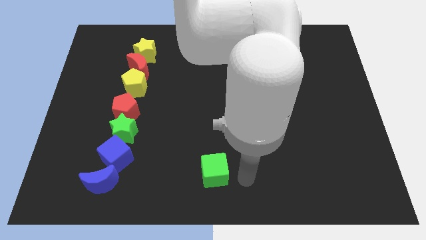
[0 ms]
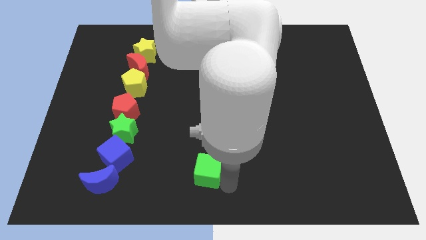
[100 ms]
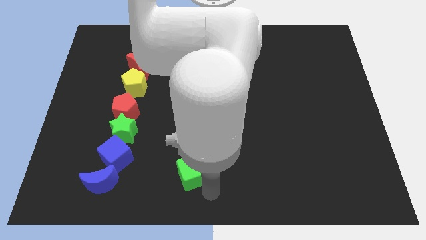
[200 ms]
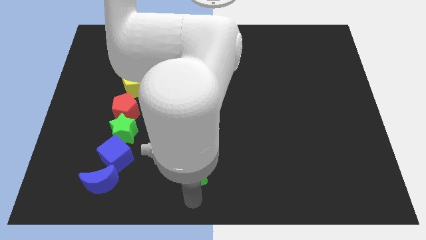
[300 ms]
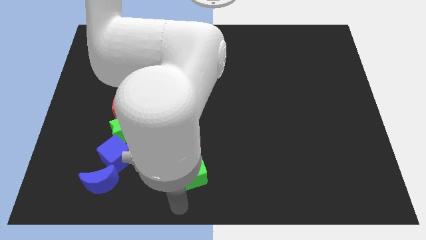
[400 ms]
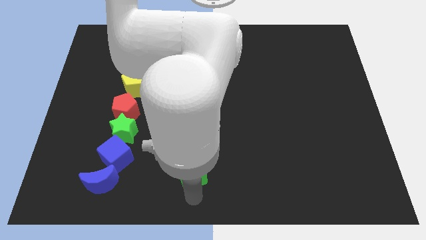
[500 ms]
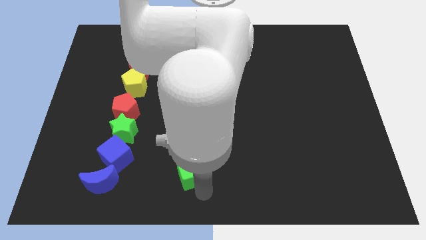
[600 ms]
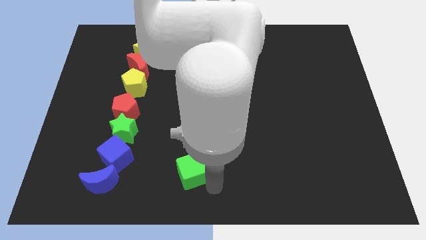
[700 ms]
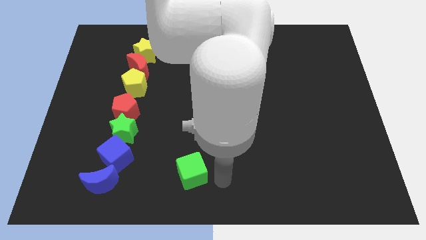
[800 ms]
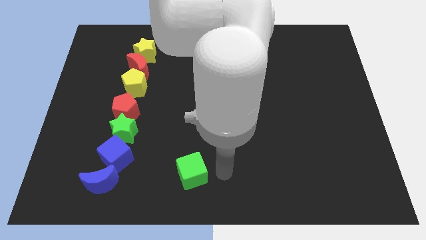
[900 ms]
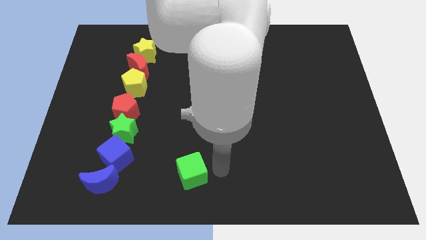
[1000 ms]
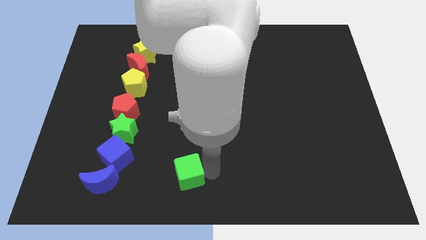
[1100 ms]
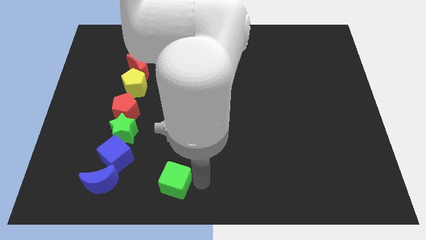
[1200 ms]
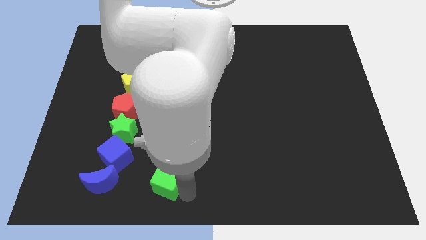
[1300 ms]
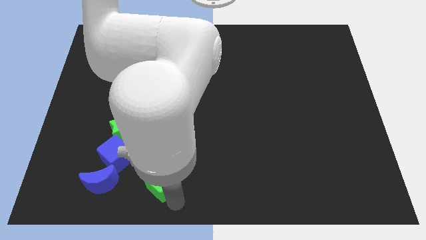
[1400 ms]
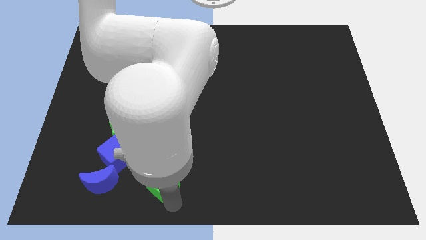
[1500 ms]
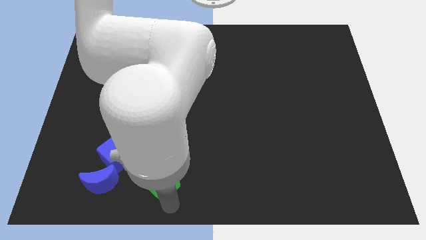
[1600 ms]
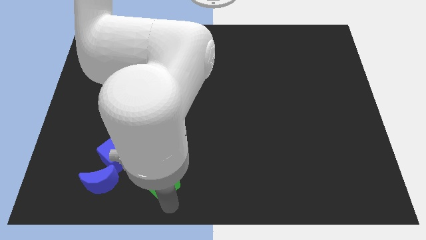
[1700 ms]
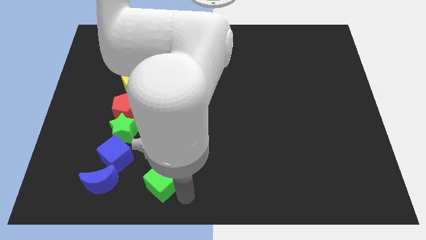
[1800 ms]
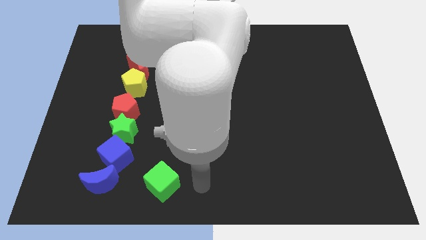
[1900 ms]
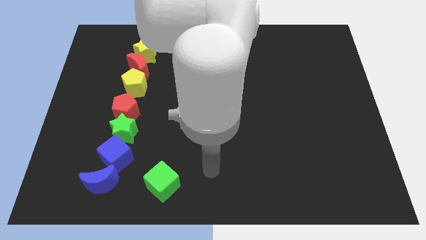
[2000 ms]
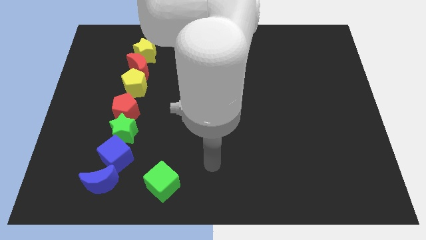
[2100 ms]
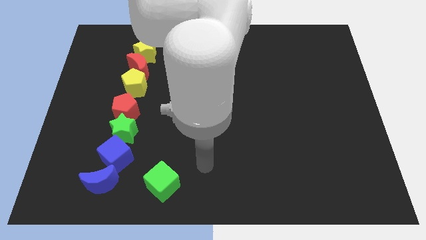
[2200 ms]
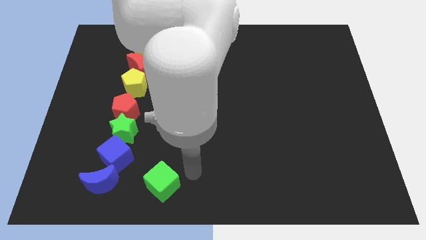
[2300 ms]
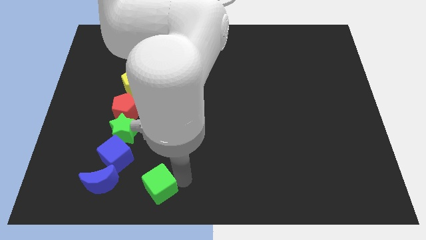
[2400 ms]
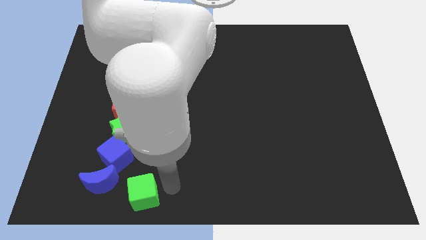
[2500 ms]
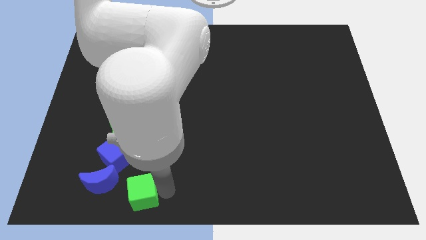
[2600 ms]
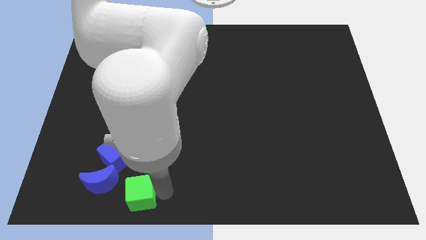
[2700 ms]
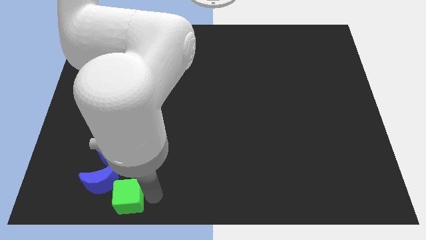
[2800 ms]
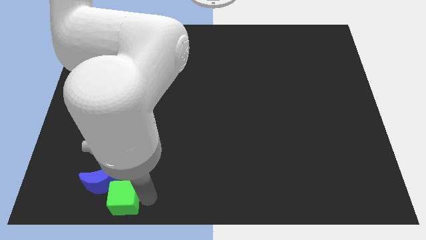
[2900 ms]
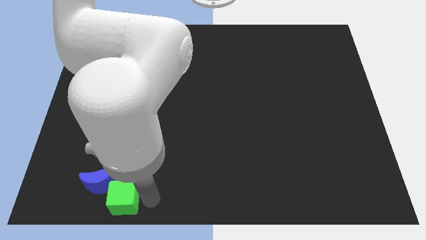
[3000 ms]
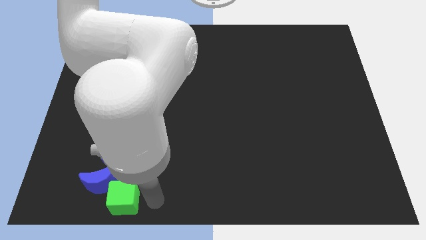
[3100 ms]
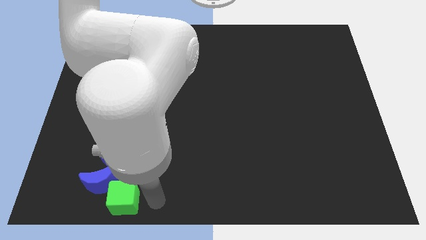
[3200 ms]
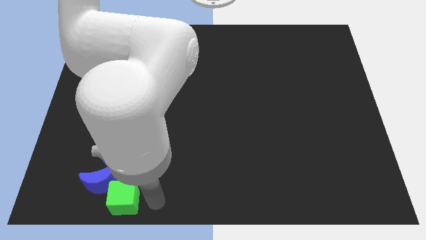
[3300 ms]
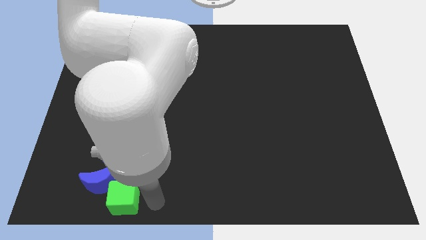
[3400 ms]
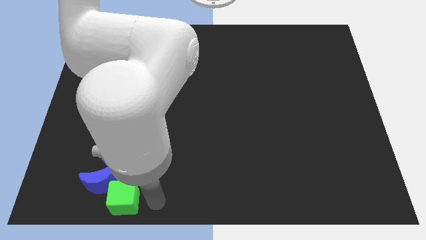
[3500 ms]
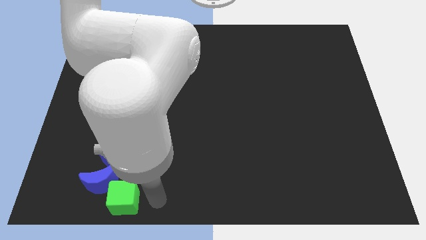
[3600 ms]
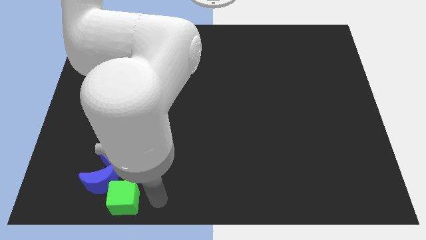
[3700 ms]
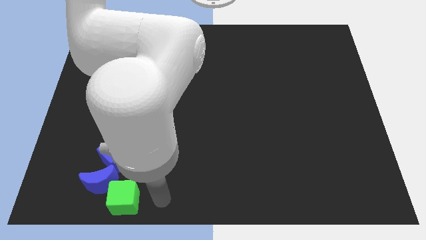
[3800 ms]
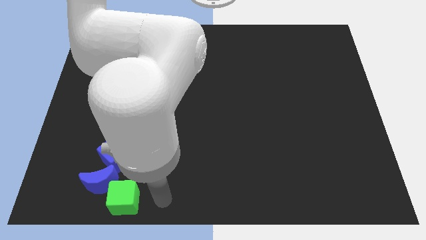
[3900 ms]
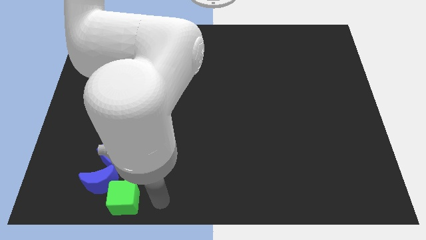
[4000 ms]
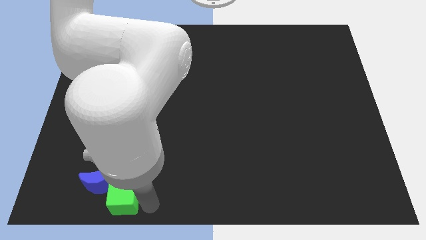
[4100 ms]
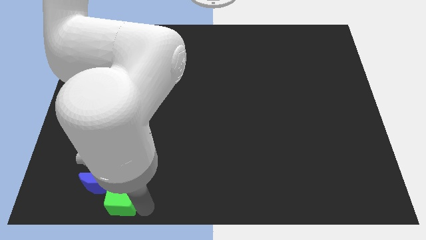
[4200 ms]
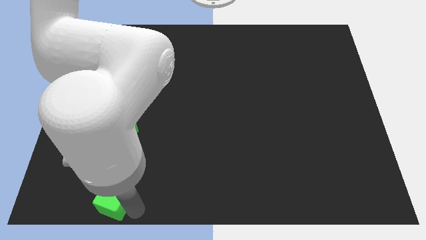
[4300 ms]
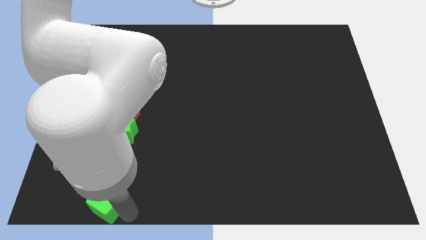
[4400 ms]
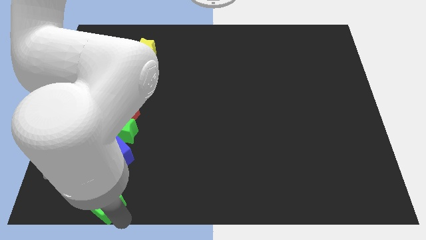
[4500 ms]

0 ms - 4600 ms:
move the green cube to the bottom of the blue crescent

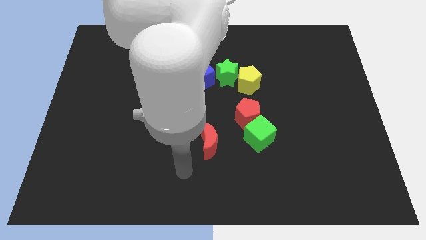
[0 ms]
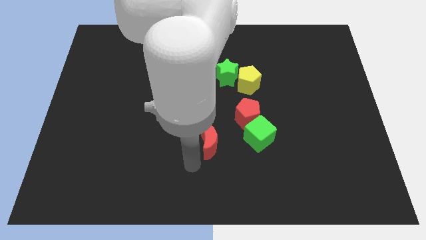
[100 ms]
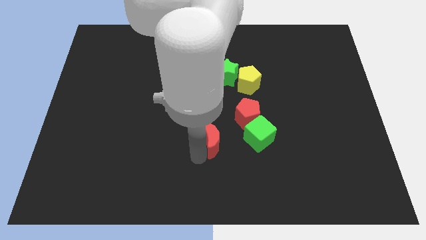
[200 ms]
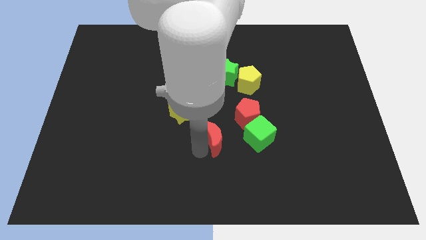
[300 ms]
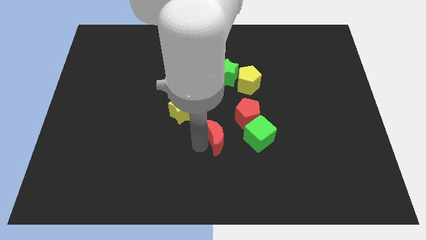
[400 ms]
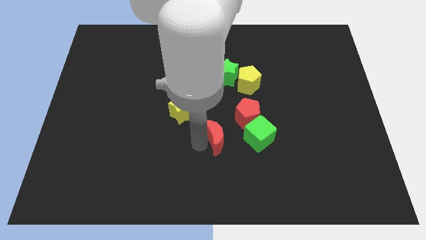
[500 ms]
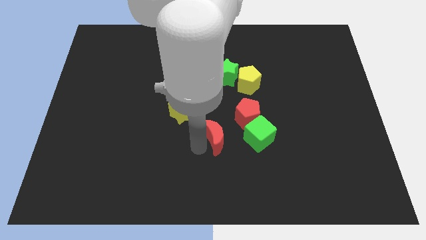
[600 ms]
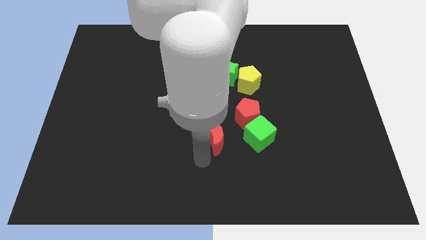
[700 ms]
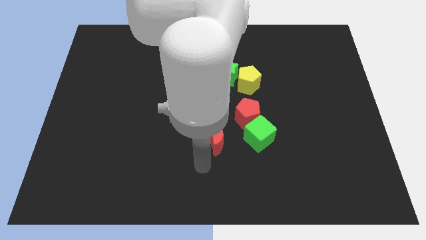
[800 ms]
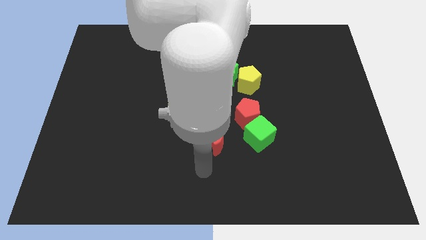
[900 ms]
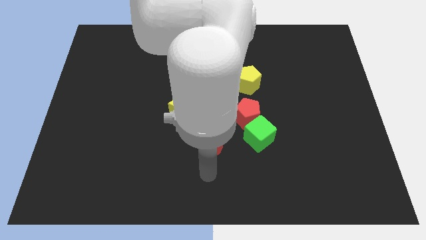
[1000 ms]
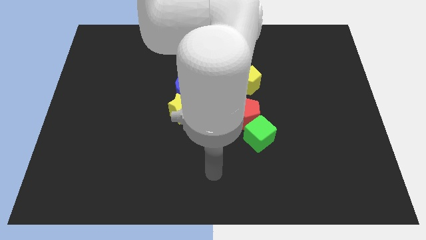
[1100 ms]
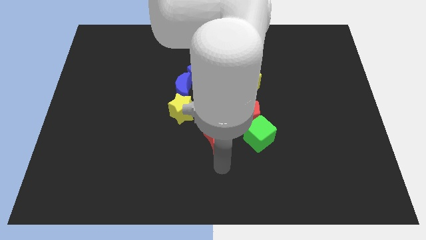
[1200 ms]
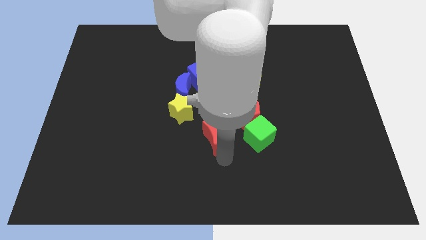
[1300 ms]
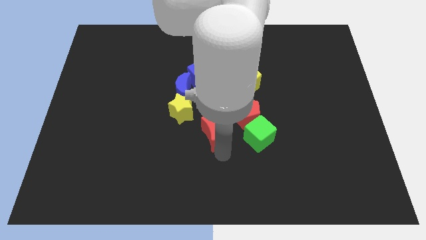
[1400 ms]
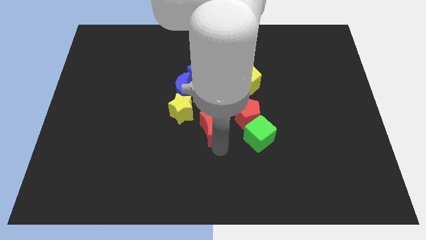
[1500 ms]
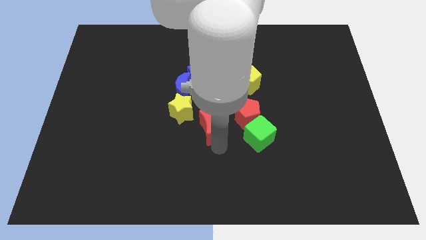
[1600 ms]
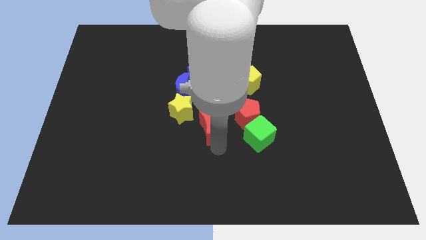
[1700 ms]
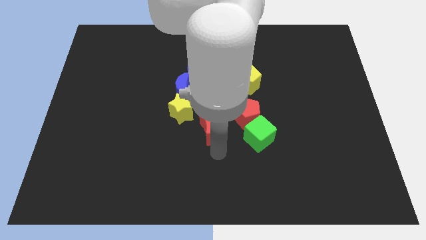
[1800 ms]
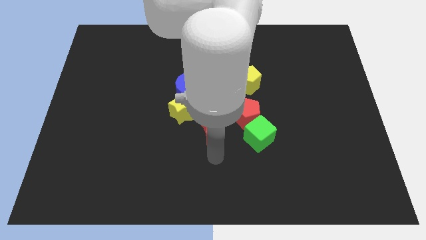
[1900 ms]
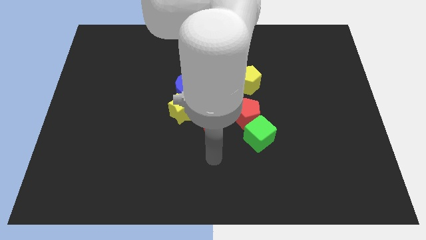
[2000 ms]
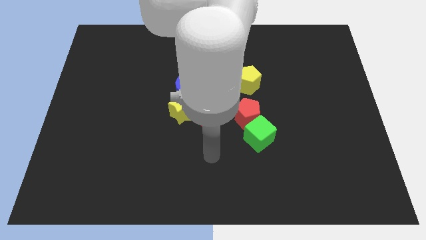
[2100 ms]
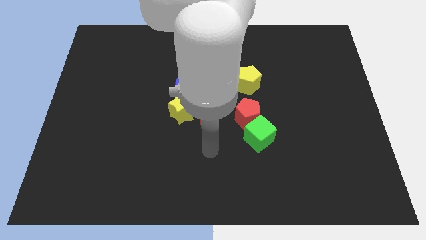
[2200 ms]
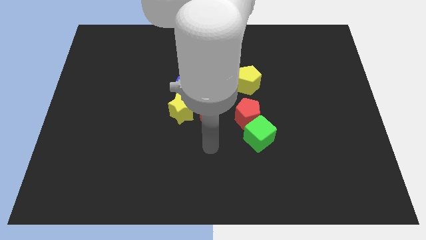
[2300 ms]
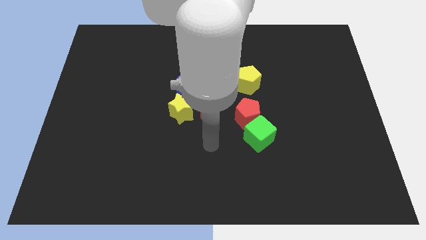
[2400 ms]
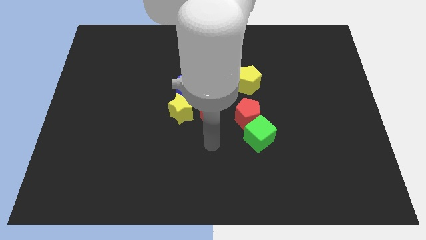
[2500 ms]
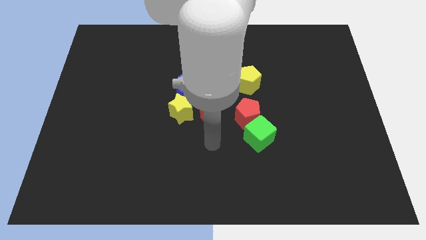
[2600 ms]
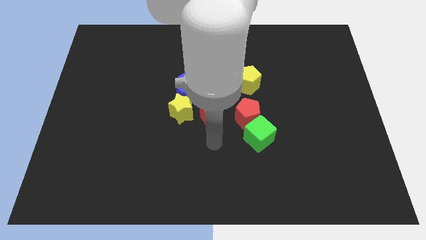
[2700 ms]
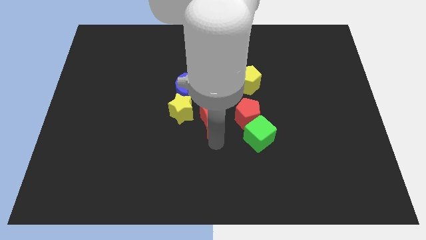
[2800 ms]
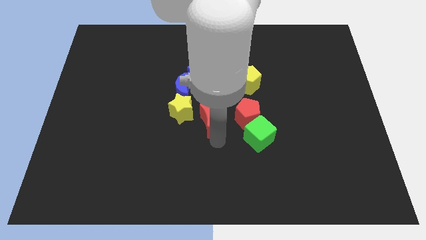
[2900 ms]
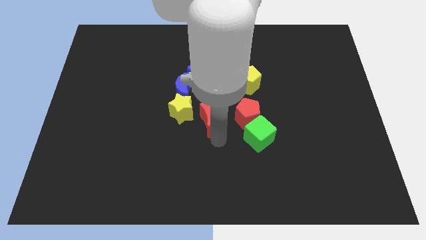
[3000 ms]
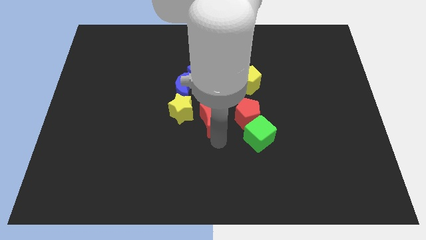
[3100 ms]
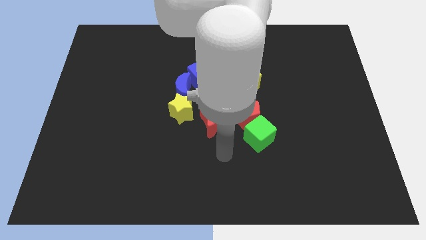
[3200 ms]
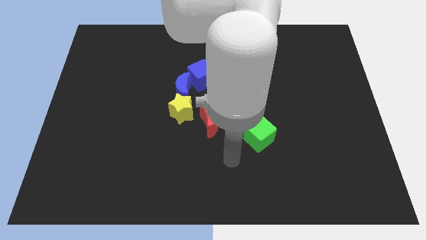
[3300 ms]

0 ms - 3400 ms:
move the red moon right to the yellow star

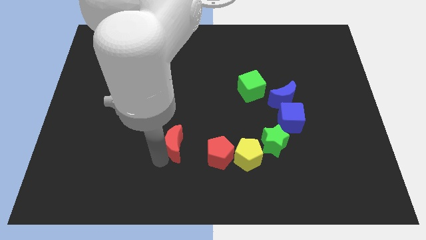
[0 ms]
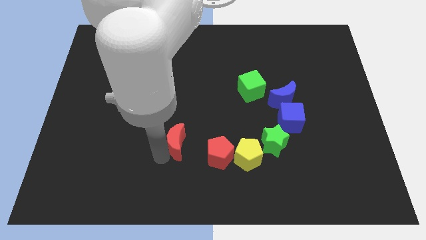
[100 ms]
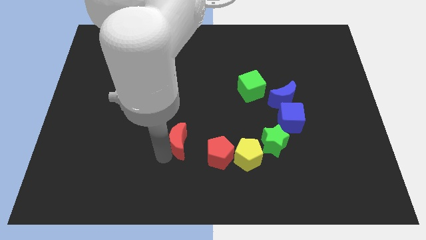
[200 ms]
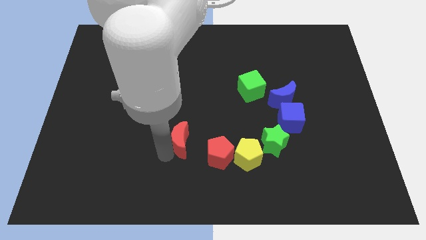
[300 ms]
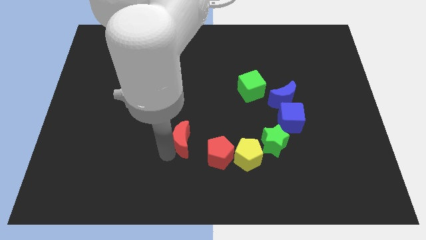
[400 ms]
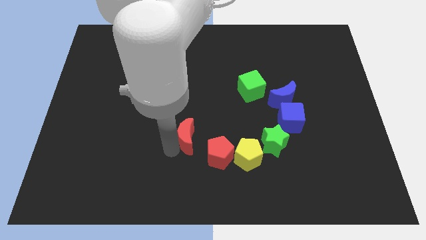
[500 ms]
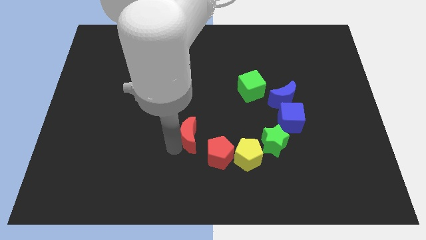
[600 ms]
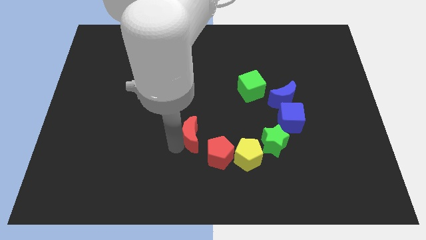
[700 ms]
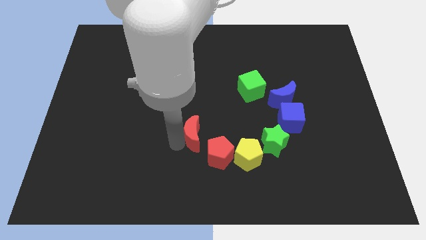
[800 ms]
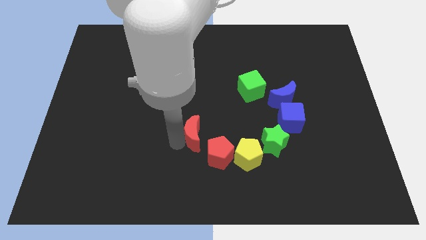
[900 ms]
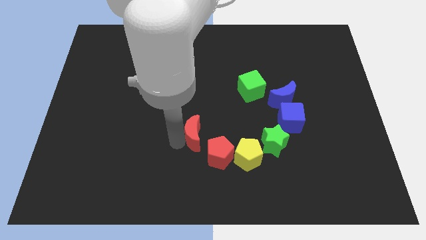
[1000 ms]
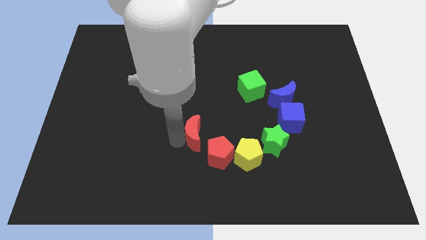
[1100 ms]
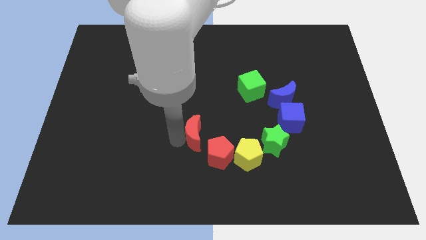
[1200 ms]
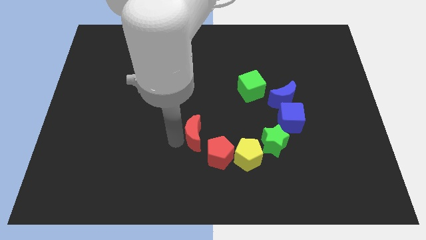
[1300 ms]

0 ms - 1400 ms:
place the red crescent towards the the top left side of the red pentagon
